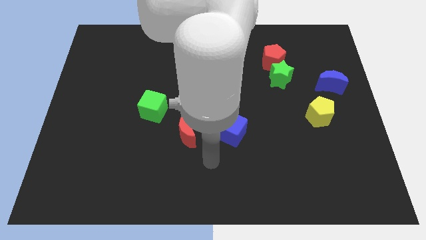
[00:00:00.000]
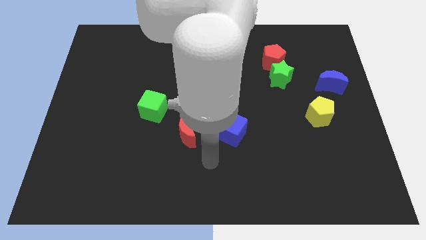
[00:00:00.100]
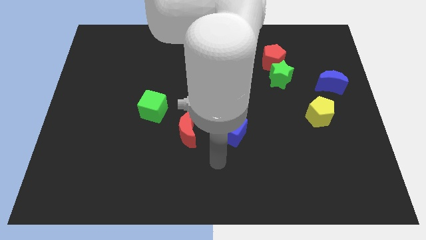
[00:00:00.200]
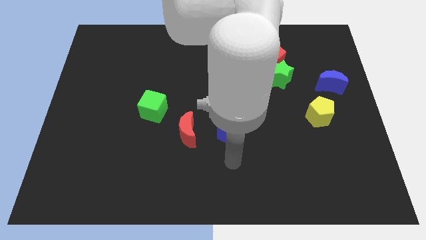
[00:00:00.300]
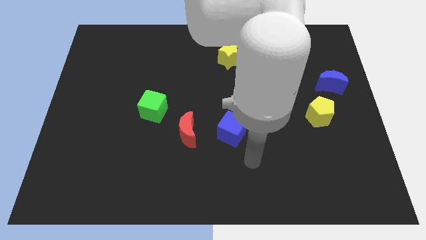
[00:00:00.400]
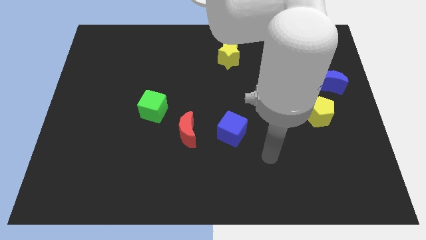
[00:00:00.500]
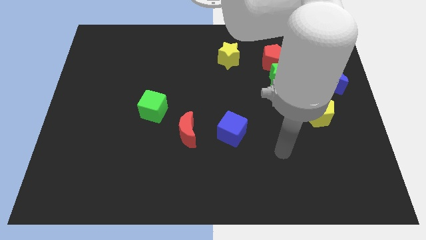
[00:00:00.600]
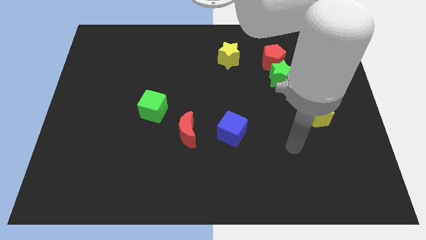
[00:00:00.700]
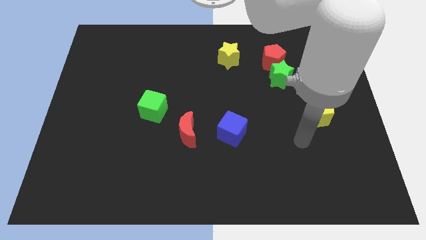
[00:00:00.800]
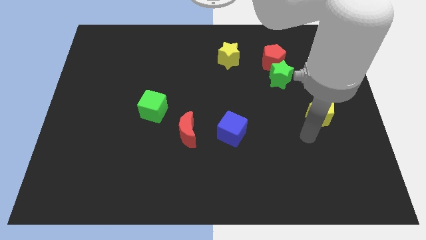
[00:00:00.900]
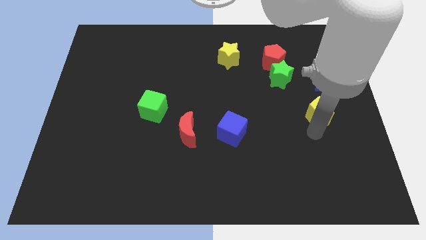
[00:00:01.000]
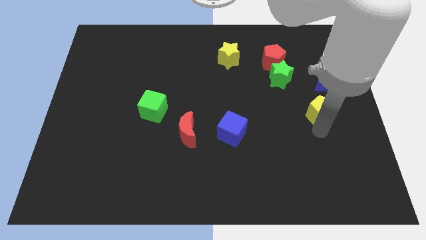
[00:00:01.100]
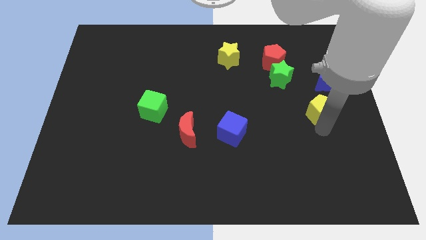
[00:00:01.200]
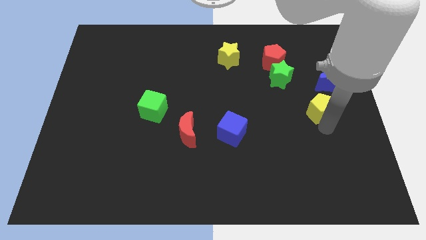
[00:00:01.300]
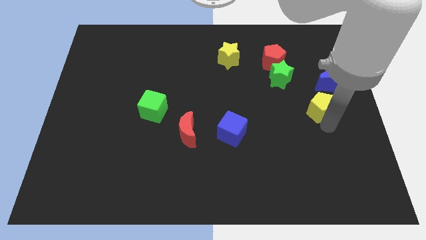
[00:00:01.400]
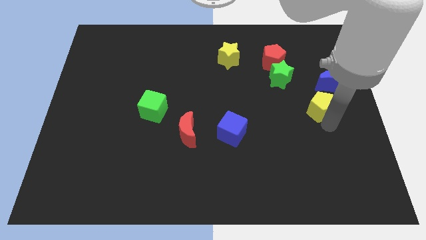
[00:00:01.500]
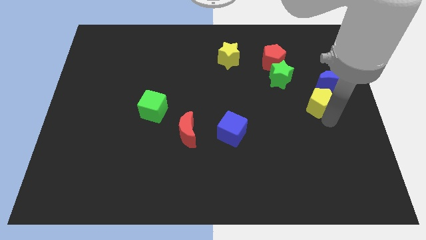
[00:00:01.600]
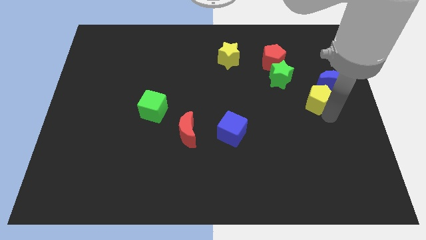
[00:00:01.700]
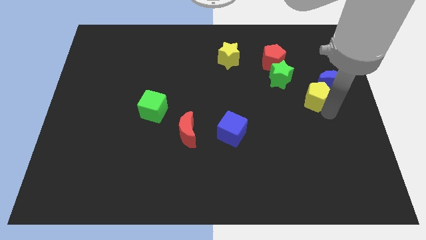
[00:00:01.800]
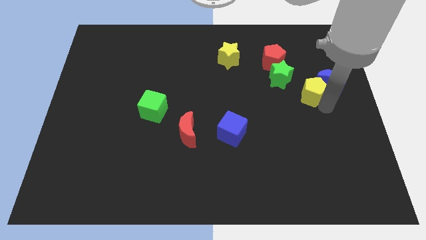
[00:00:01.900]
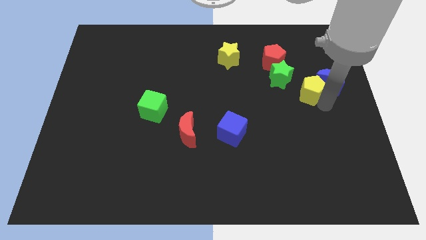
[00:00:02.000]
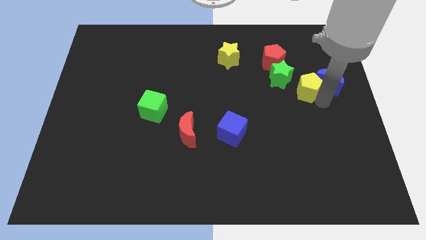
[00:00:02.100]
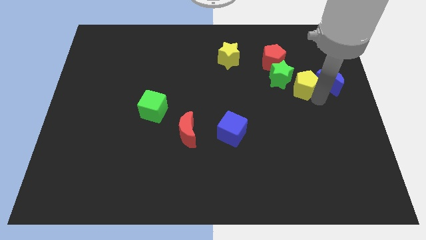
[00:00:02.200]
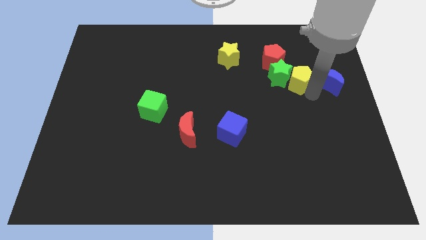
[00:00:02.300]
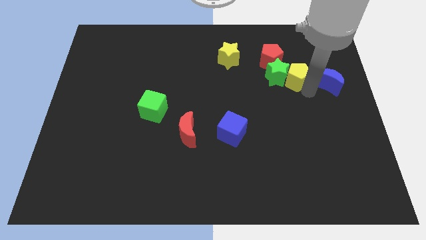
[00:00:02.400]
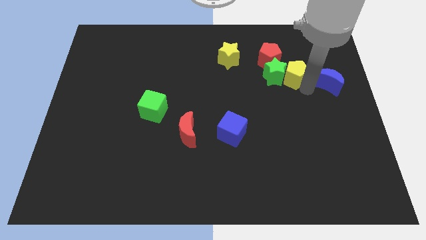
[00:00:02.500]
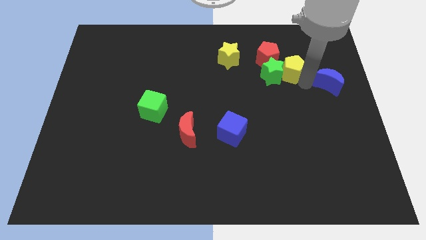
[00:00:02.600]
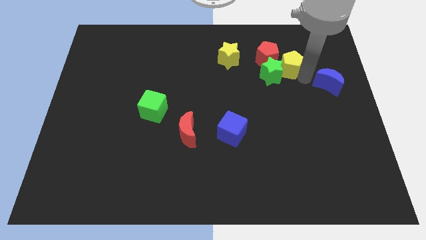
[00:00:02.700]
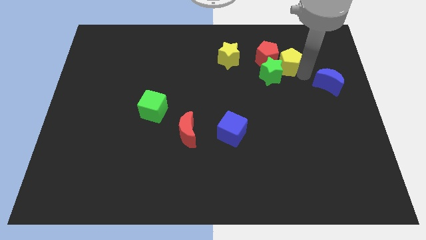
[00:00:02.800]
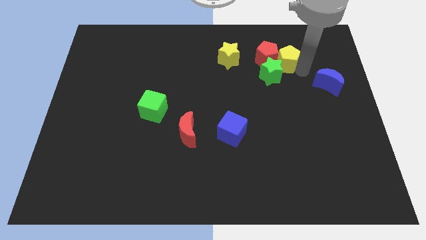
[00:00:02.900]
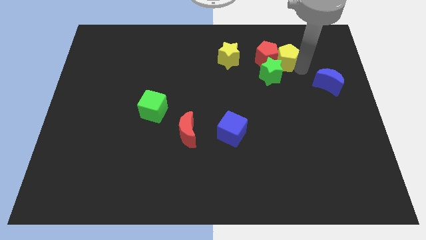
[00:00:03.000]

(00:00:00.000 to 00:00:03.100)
push the yellow pentagon to the red pentagon

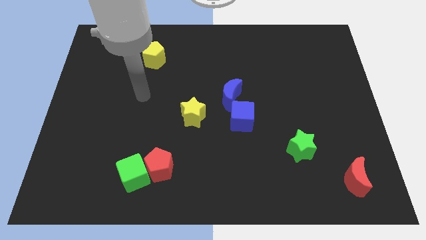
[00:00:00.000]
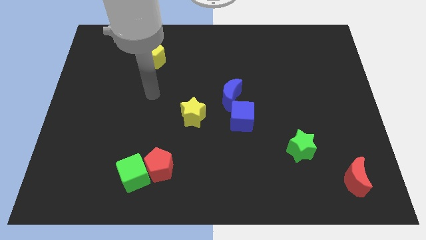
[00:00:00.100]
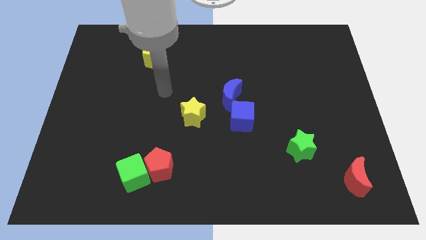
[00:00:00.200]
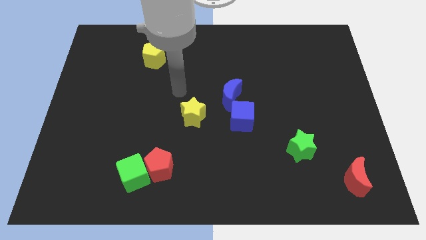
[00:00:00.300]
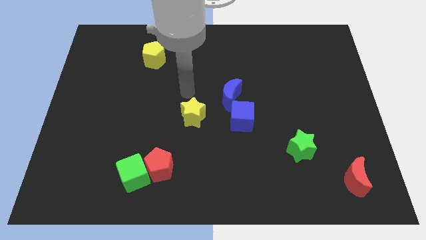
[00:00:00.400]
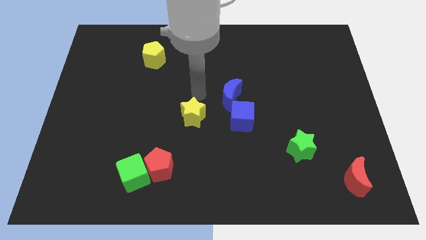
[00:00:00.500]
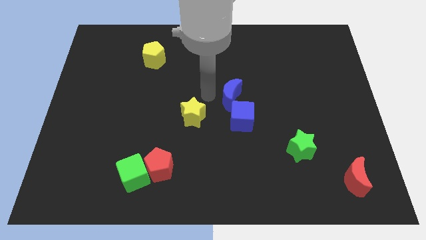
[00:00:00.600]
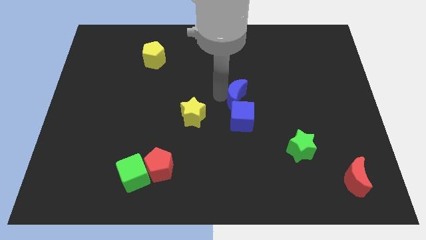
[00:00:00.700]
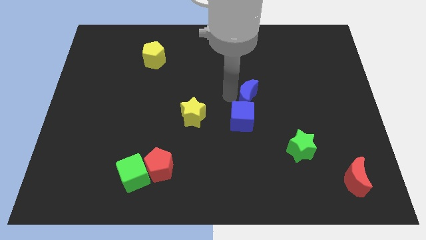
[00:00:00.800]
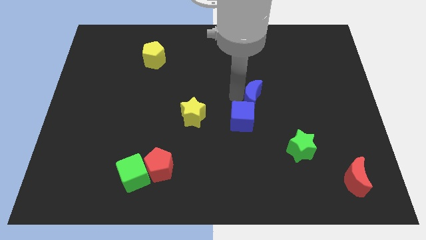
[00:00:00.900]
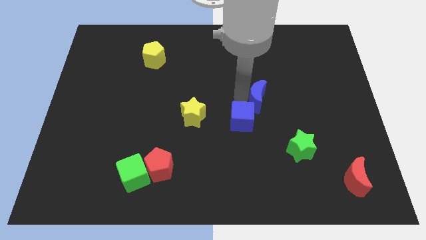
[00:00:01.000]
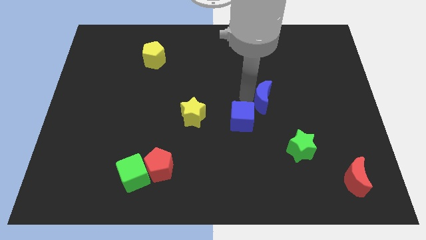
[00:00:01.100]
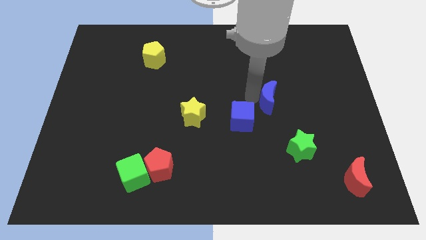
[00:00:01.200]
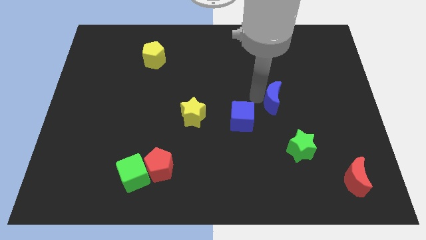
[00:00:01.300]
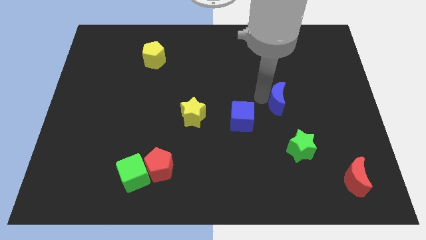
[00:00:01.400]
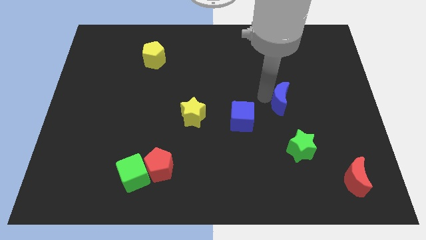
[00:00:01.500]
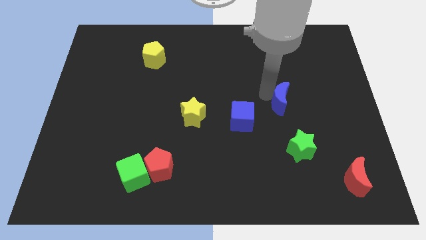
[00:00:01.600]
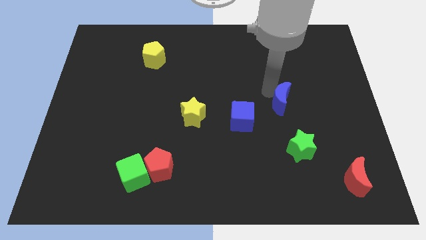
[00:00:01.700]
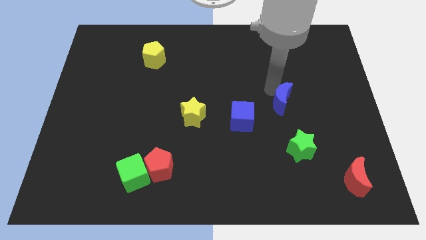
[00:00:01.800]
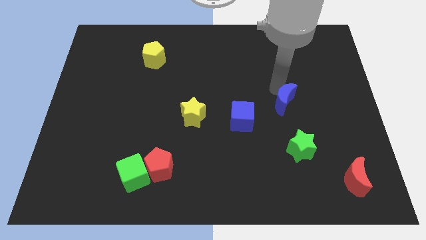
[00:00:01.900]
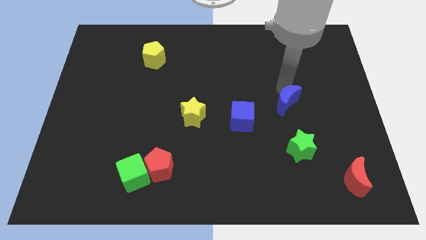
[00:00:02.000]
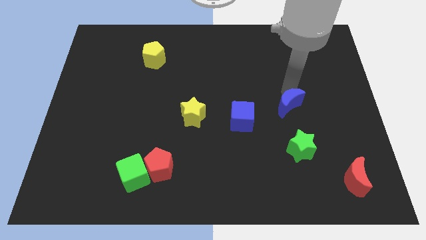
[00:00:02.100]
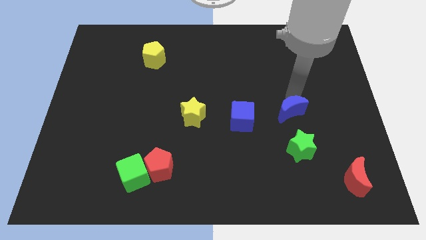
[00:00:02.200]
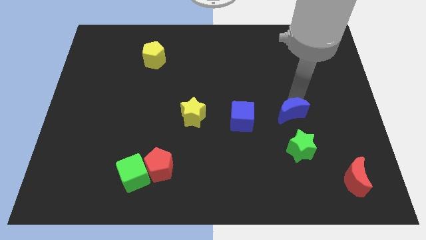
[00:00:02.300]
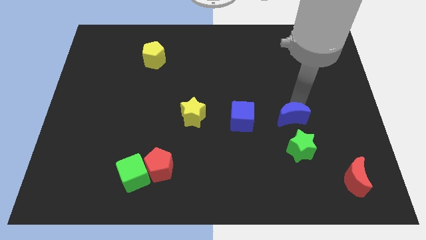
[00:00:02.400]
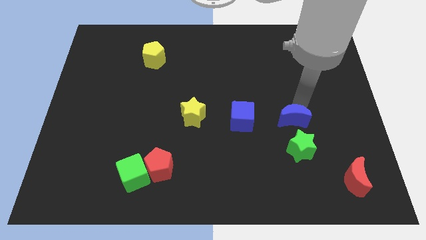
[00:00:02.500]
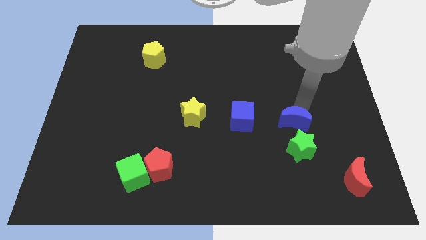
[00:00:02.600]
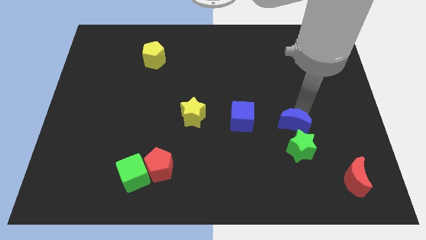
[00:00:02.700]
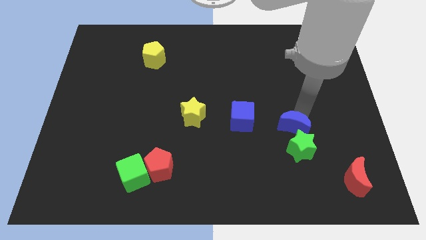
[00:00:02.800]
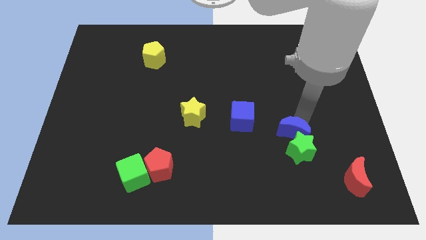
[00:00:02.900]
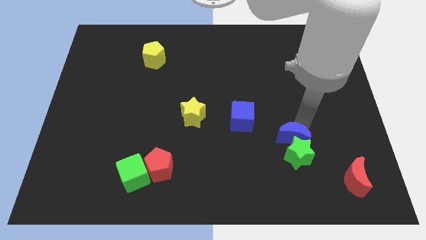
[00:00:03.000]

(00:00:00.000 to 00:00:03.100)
push the blue moon next to the green star

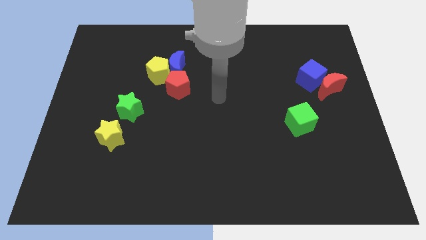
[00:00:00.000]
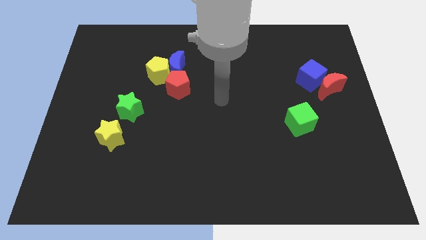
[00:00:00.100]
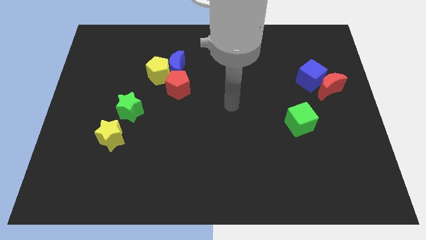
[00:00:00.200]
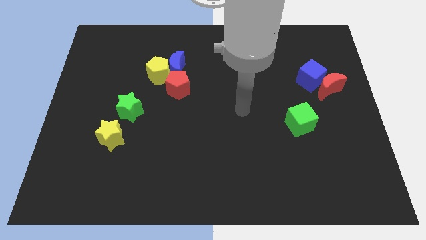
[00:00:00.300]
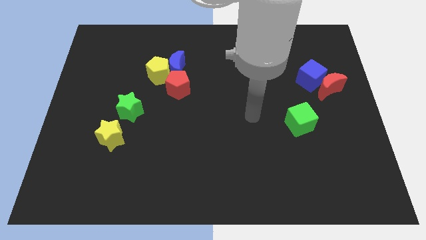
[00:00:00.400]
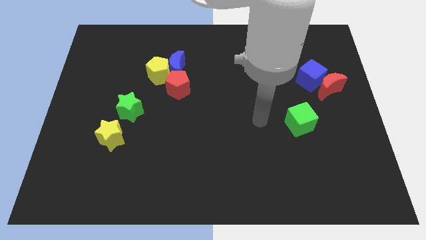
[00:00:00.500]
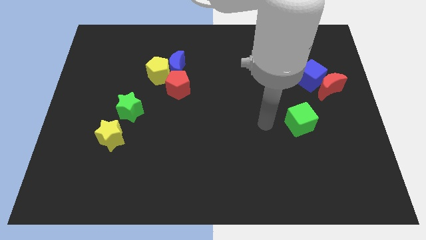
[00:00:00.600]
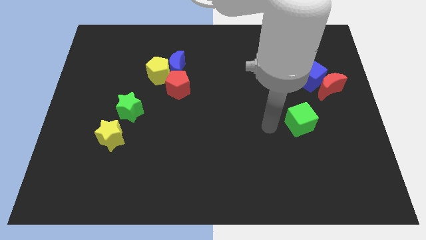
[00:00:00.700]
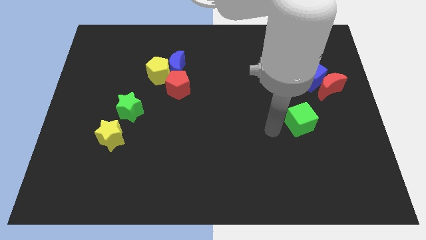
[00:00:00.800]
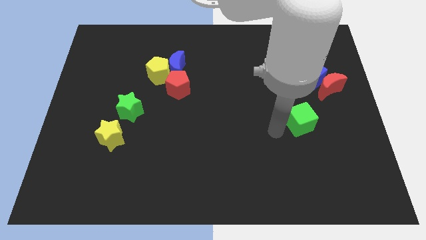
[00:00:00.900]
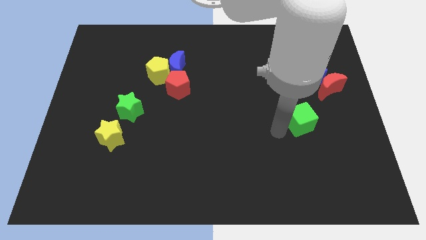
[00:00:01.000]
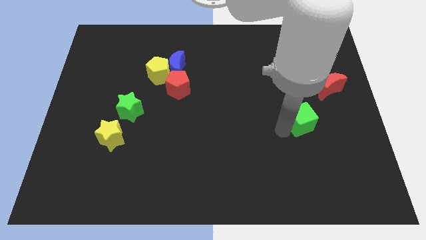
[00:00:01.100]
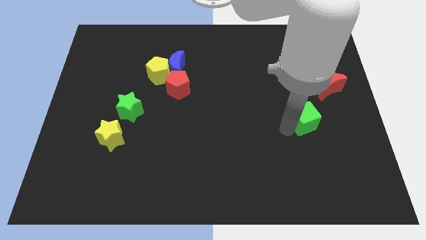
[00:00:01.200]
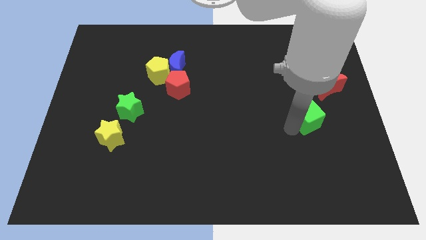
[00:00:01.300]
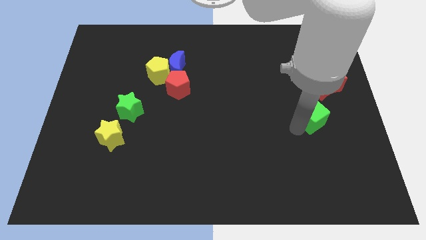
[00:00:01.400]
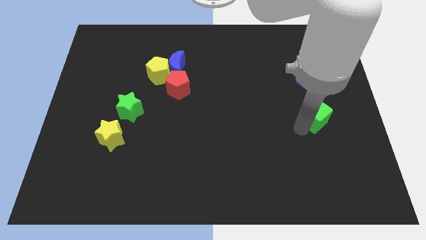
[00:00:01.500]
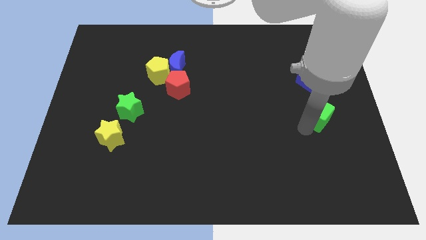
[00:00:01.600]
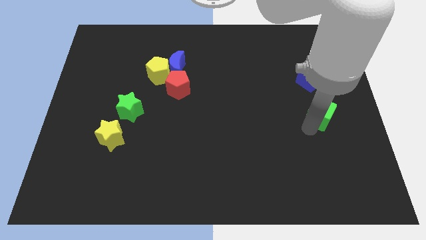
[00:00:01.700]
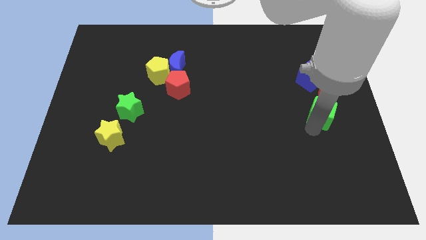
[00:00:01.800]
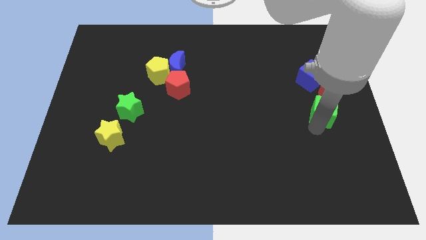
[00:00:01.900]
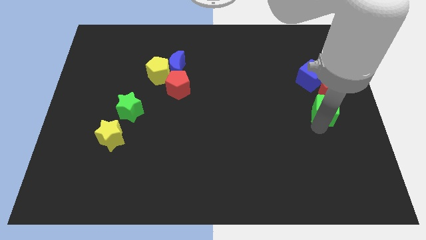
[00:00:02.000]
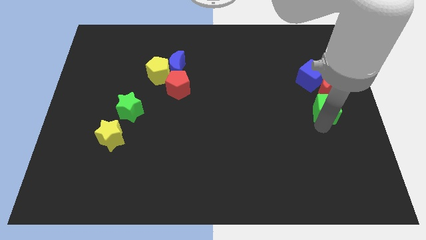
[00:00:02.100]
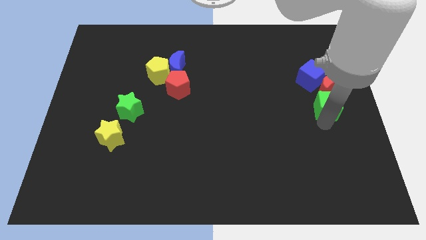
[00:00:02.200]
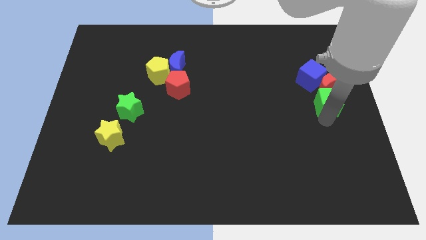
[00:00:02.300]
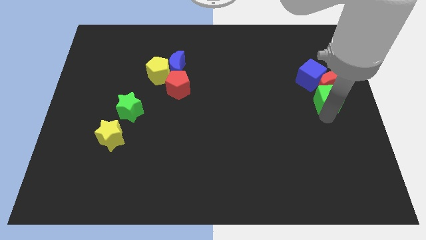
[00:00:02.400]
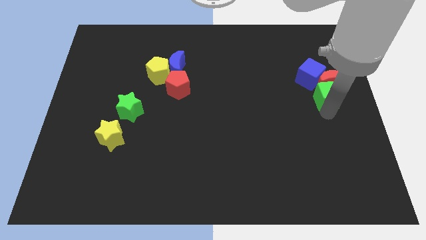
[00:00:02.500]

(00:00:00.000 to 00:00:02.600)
put the green cube close to the red moon
